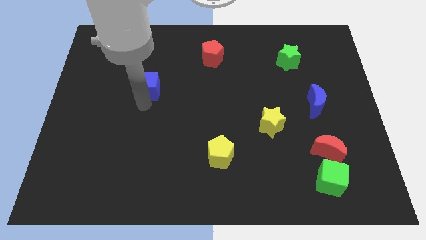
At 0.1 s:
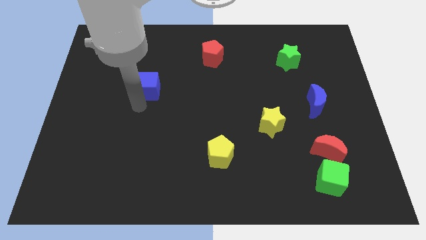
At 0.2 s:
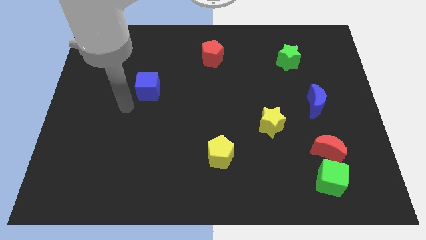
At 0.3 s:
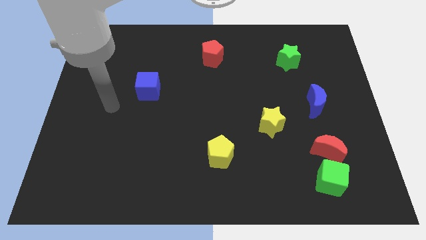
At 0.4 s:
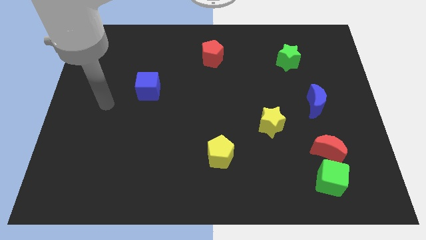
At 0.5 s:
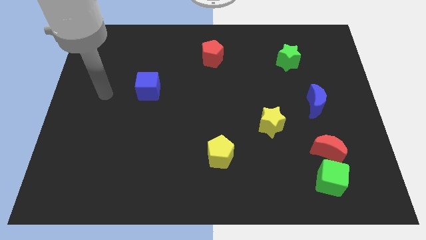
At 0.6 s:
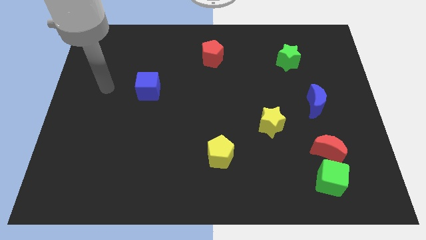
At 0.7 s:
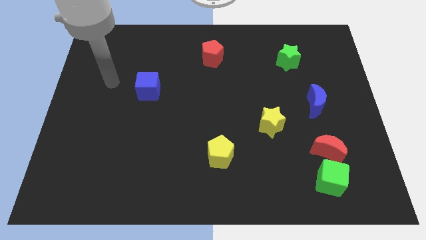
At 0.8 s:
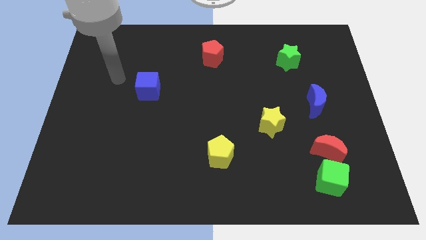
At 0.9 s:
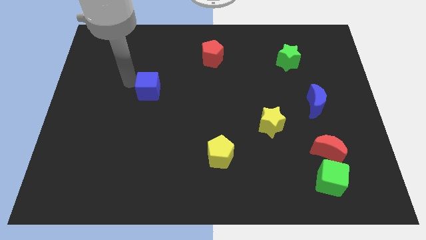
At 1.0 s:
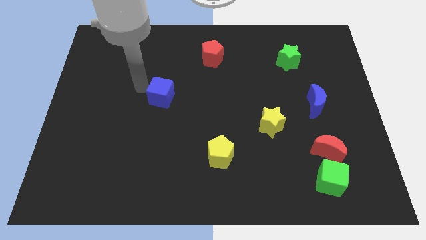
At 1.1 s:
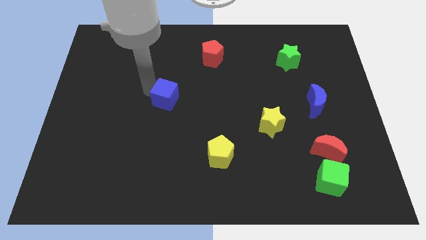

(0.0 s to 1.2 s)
point your arm at the left side of the blue cube

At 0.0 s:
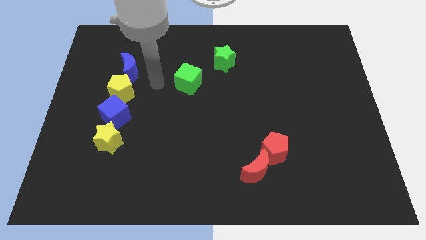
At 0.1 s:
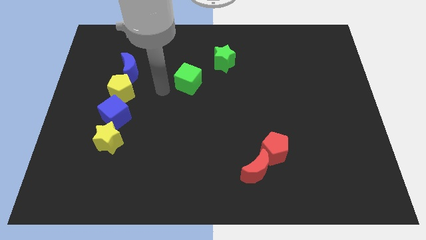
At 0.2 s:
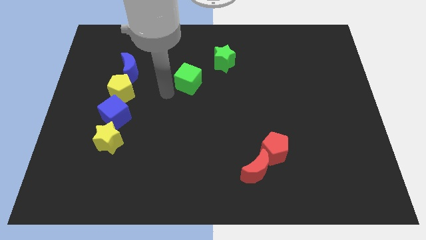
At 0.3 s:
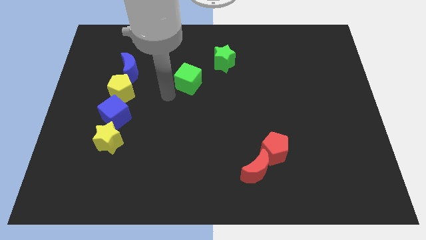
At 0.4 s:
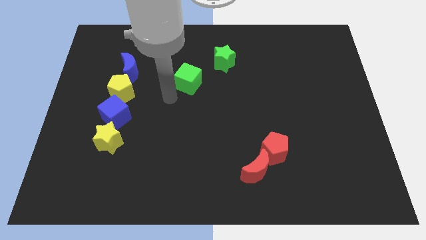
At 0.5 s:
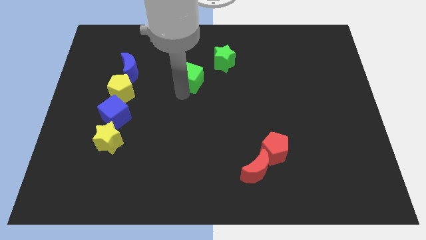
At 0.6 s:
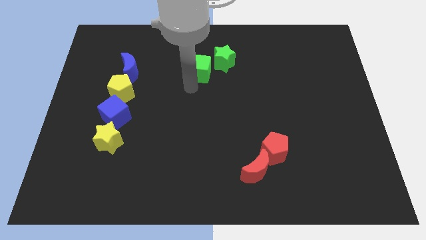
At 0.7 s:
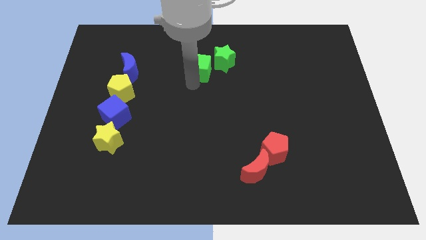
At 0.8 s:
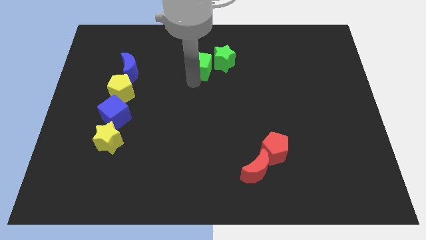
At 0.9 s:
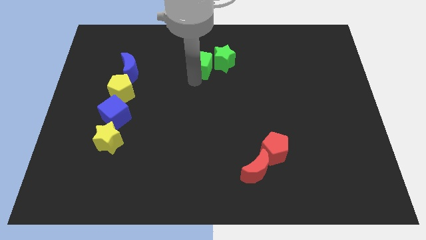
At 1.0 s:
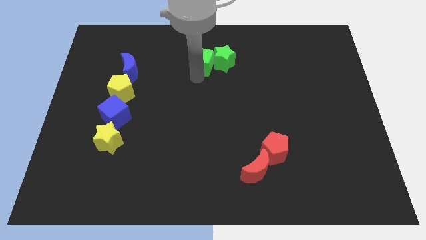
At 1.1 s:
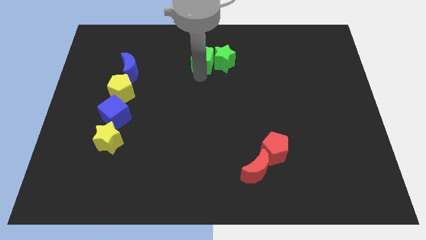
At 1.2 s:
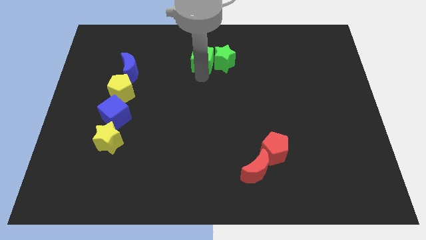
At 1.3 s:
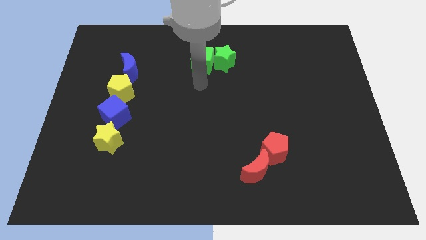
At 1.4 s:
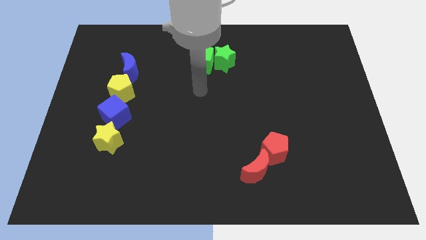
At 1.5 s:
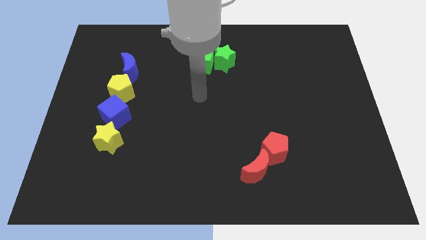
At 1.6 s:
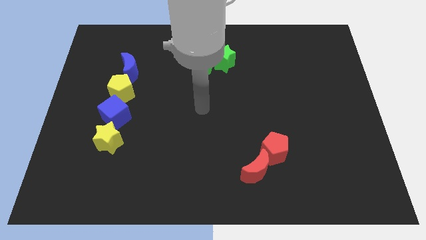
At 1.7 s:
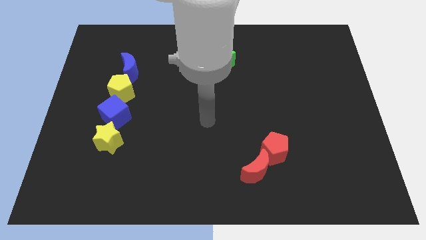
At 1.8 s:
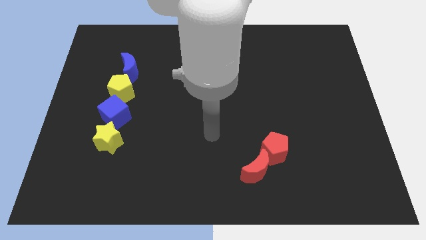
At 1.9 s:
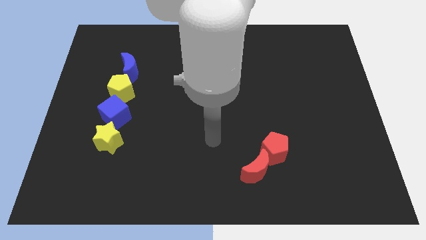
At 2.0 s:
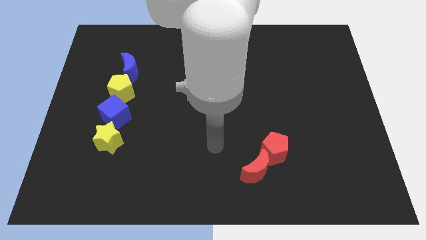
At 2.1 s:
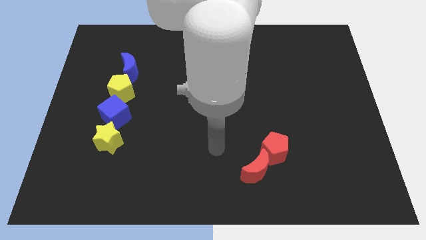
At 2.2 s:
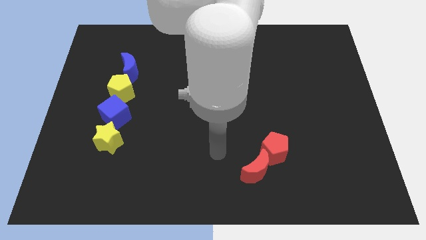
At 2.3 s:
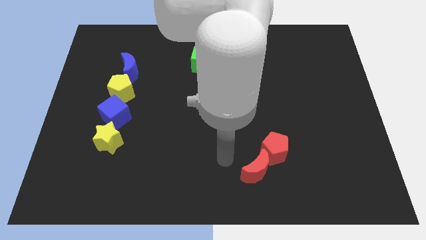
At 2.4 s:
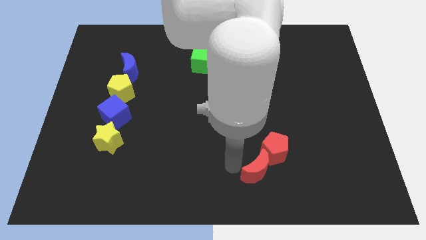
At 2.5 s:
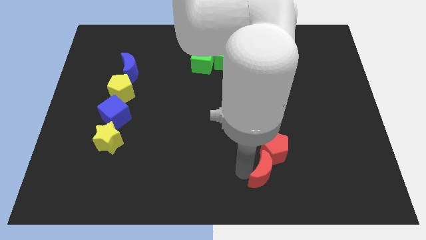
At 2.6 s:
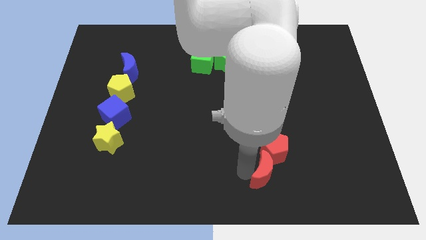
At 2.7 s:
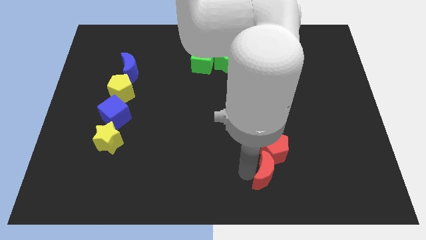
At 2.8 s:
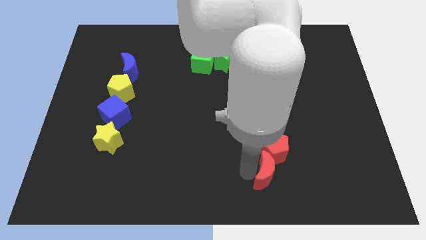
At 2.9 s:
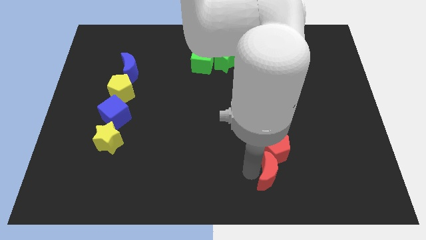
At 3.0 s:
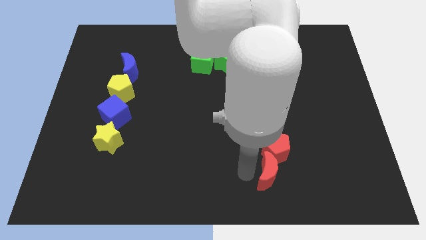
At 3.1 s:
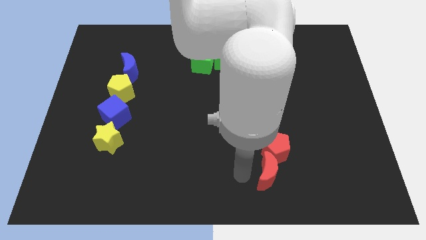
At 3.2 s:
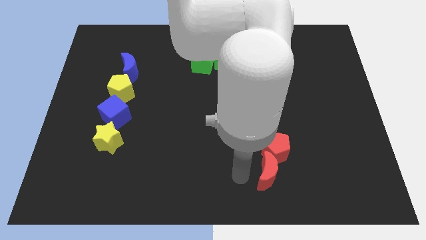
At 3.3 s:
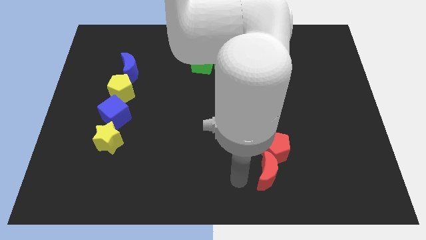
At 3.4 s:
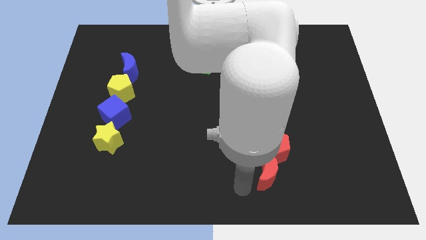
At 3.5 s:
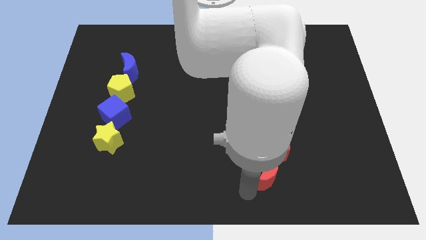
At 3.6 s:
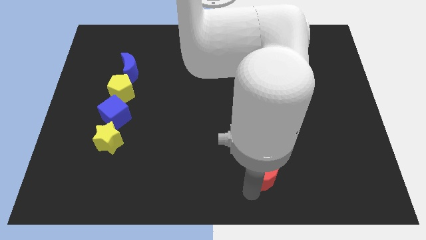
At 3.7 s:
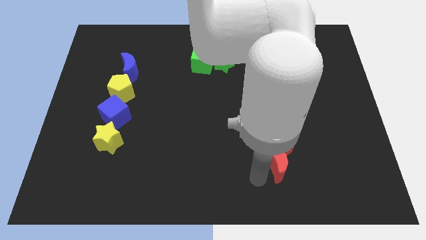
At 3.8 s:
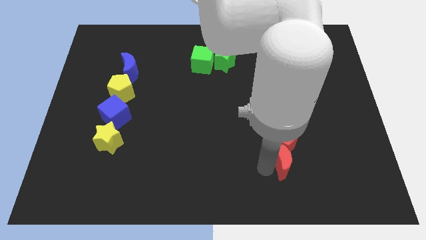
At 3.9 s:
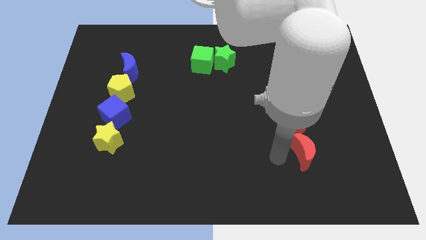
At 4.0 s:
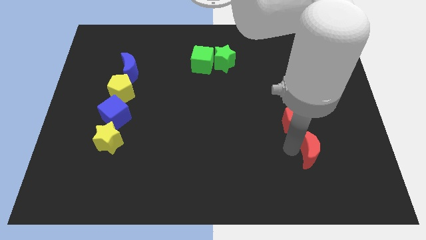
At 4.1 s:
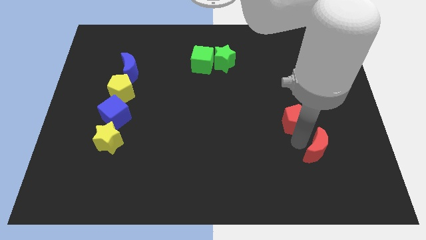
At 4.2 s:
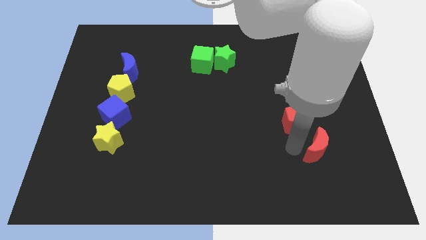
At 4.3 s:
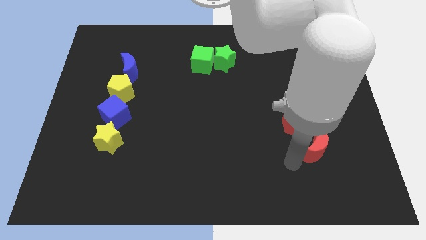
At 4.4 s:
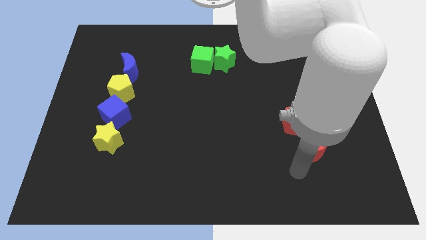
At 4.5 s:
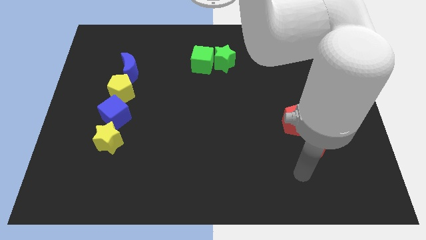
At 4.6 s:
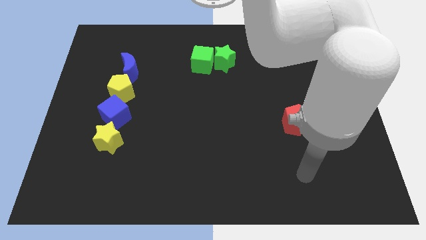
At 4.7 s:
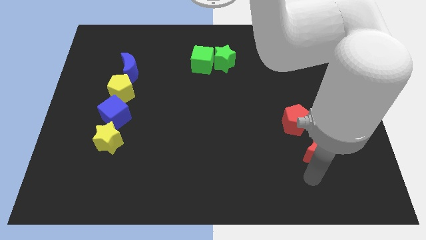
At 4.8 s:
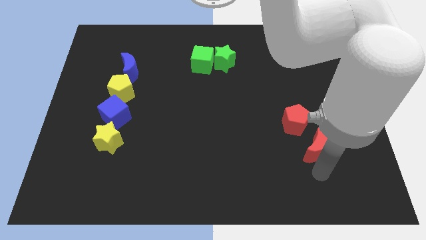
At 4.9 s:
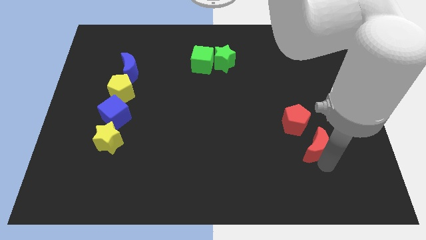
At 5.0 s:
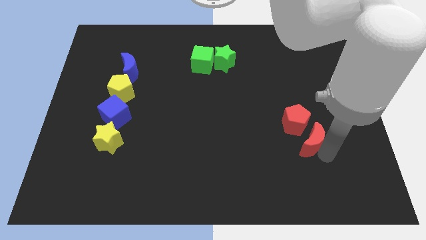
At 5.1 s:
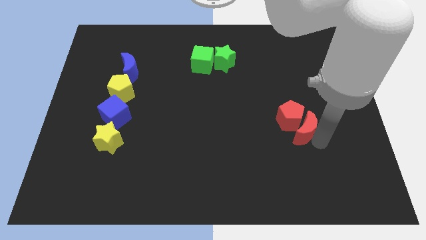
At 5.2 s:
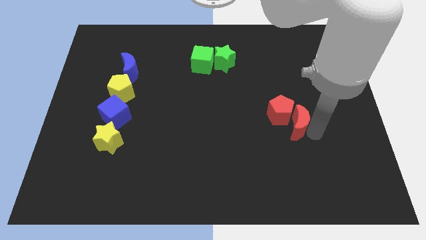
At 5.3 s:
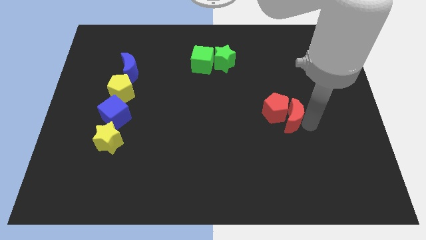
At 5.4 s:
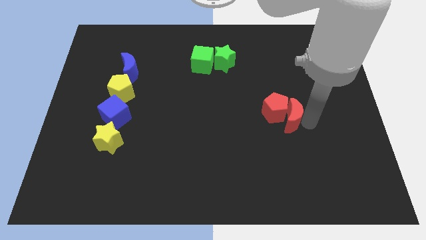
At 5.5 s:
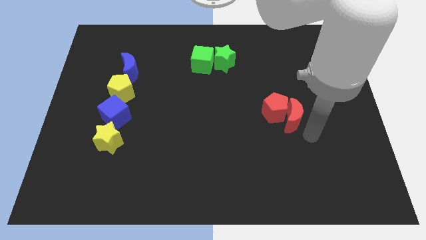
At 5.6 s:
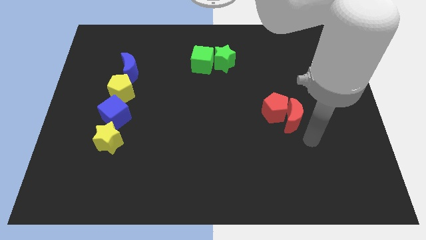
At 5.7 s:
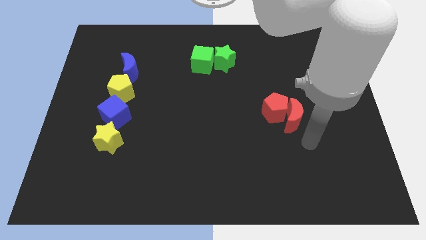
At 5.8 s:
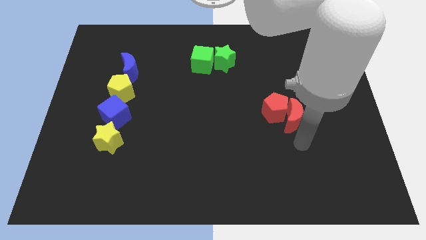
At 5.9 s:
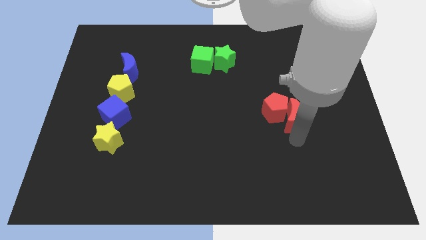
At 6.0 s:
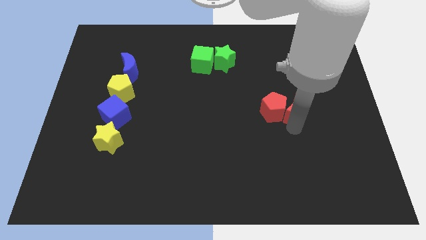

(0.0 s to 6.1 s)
push the red blocks towards the green blocks

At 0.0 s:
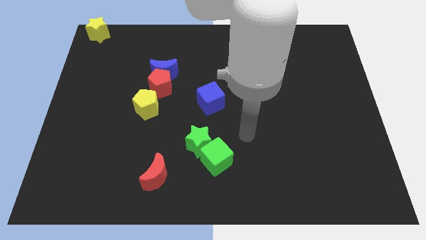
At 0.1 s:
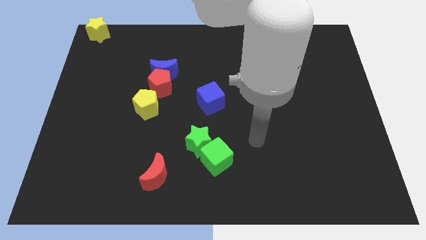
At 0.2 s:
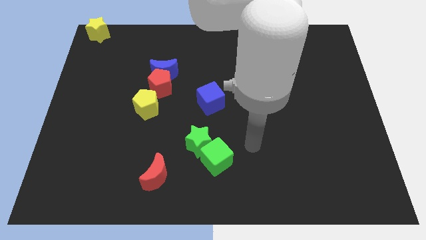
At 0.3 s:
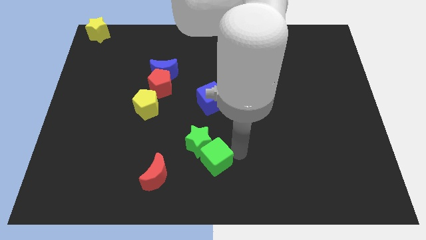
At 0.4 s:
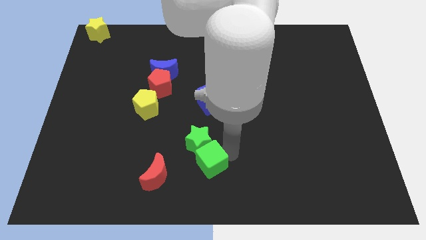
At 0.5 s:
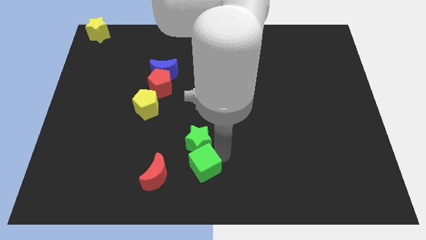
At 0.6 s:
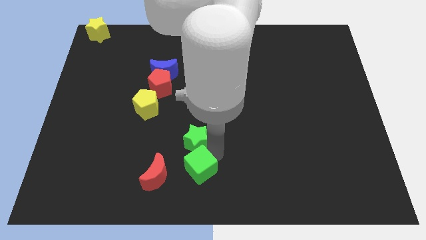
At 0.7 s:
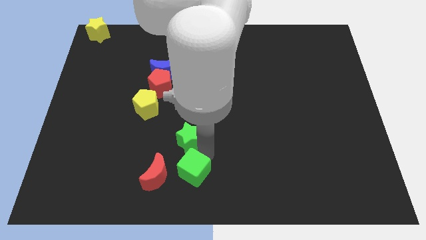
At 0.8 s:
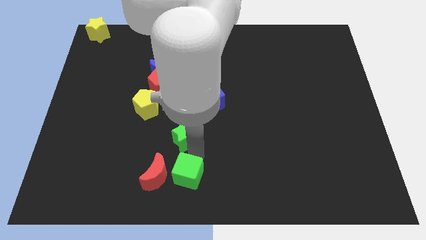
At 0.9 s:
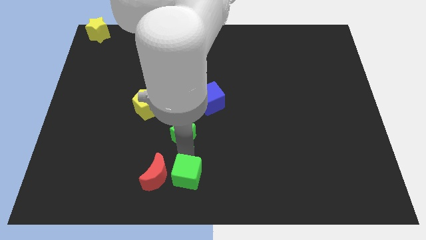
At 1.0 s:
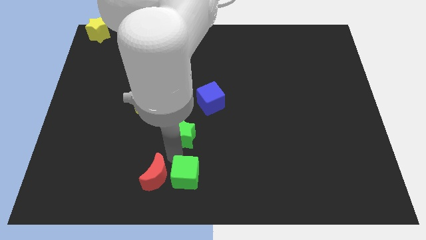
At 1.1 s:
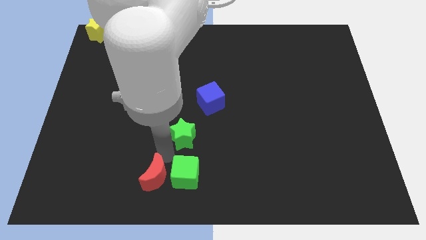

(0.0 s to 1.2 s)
separate the green cube and green star from each other

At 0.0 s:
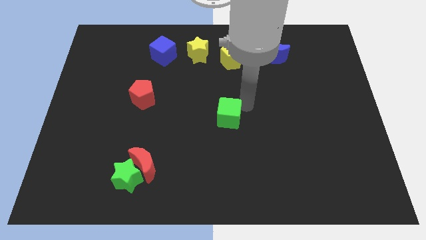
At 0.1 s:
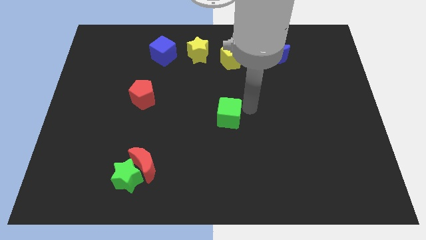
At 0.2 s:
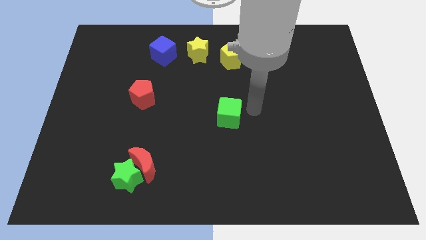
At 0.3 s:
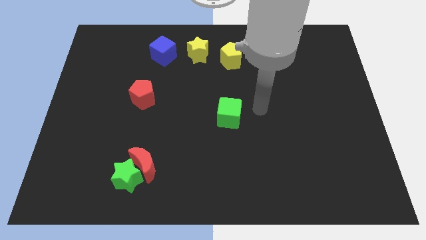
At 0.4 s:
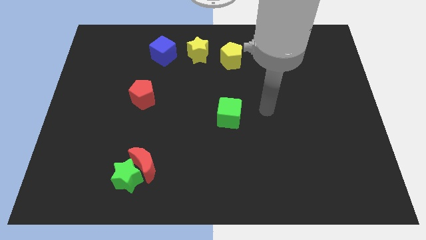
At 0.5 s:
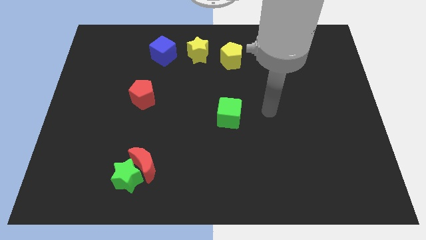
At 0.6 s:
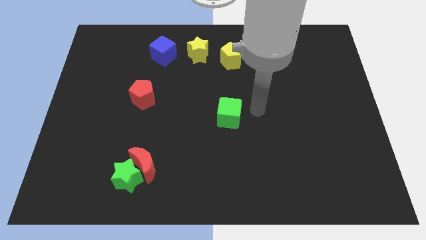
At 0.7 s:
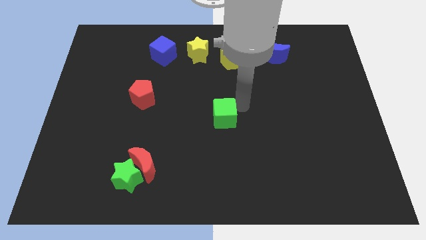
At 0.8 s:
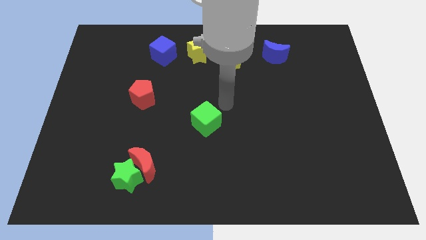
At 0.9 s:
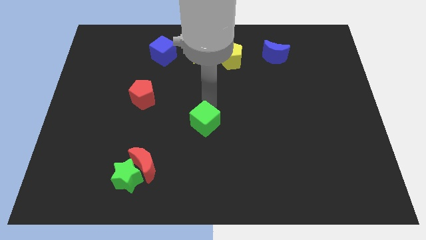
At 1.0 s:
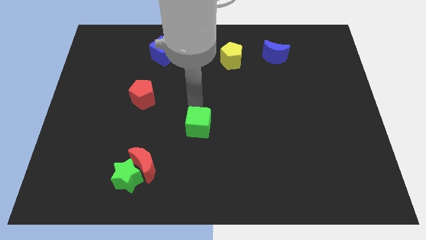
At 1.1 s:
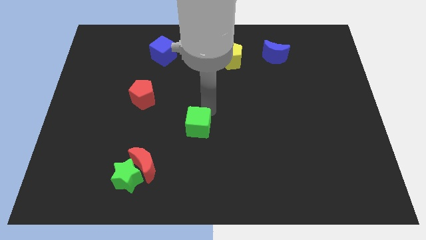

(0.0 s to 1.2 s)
place green cube below yellow star
